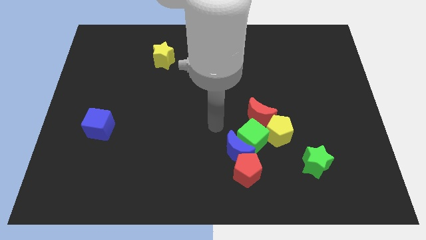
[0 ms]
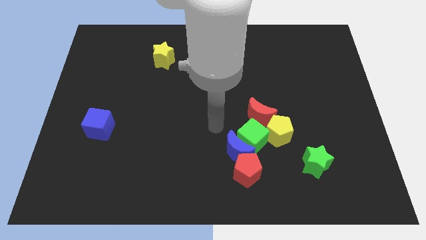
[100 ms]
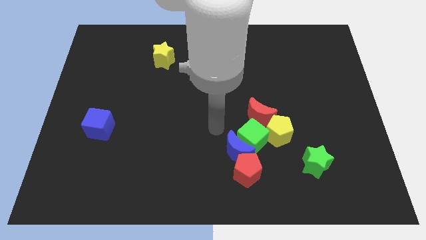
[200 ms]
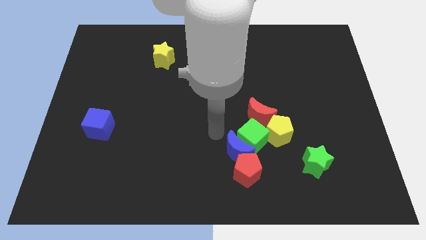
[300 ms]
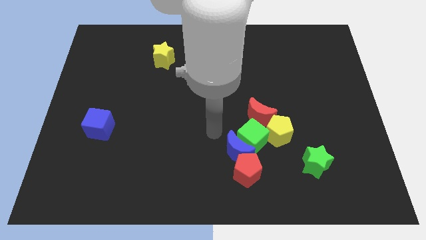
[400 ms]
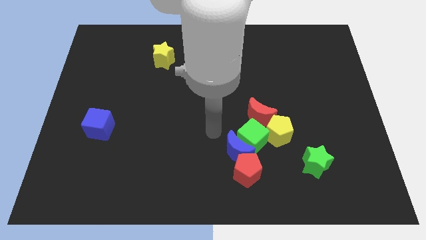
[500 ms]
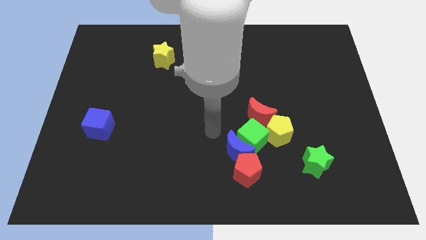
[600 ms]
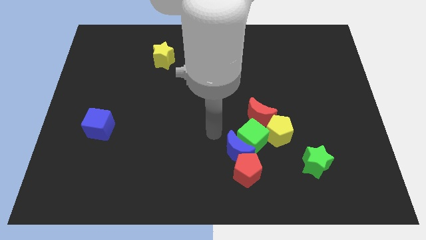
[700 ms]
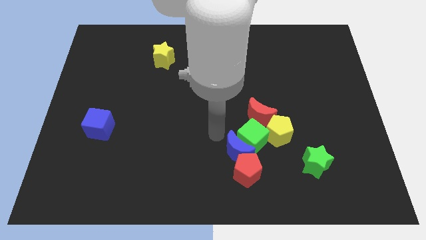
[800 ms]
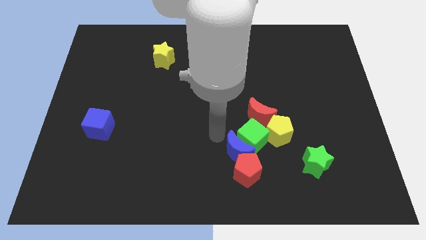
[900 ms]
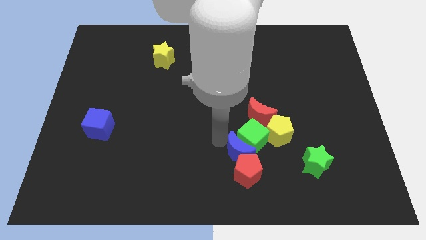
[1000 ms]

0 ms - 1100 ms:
tap your arm to the top left of blue moon

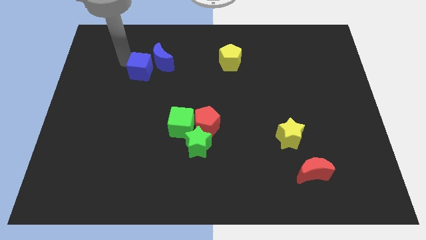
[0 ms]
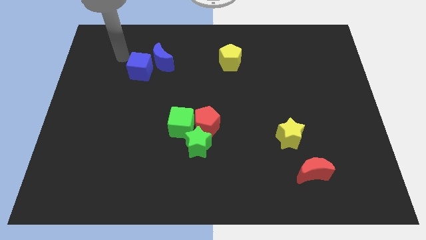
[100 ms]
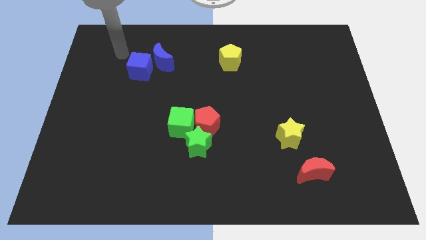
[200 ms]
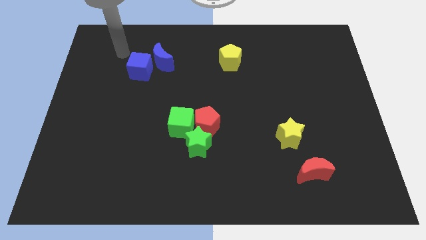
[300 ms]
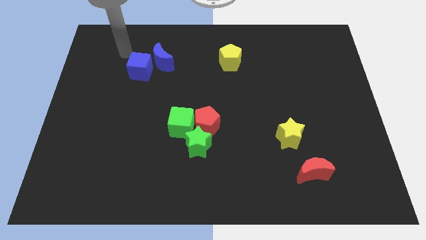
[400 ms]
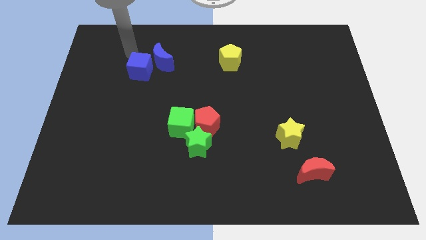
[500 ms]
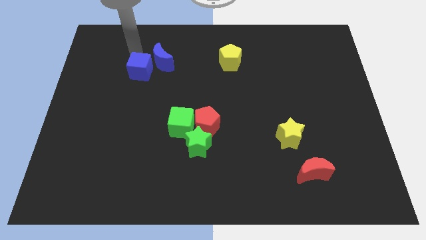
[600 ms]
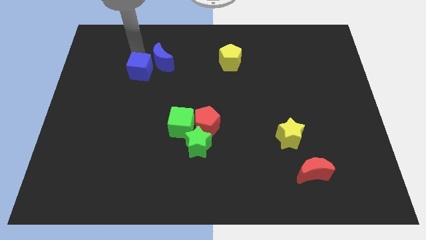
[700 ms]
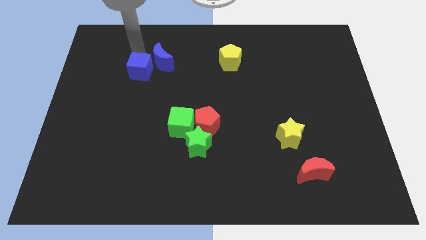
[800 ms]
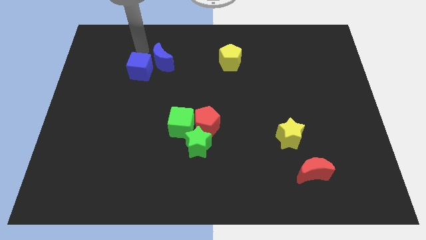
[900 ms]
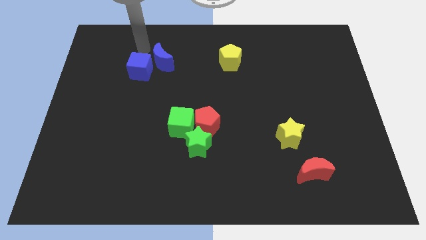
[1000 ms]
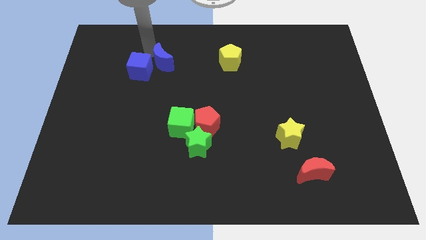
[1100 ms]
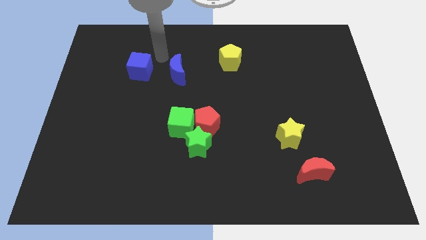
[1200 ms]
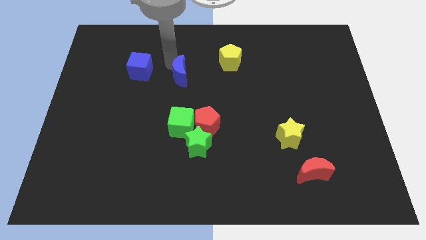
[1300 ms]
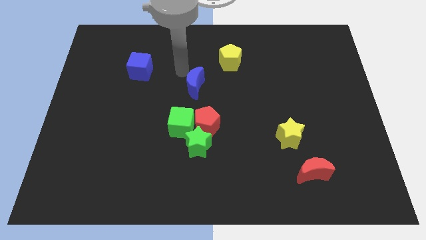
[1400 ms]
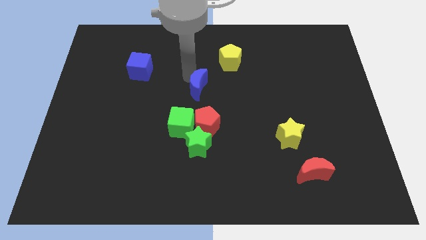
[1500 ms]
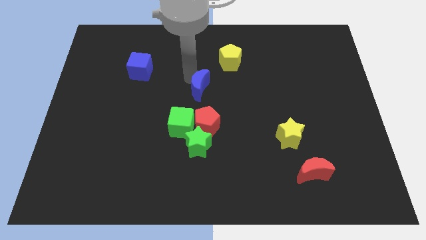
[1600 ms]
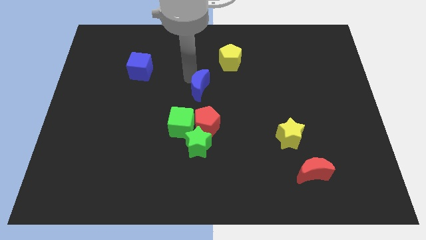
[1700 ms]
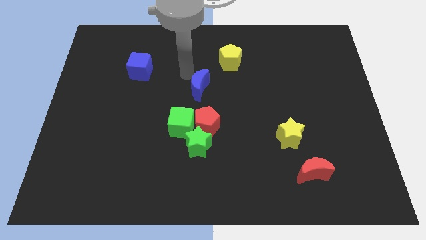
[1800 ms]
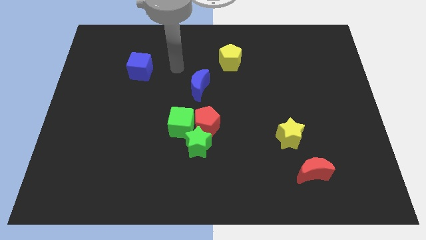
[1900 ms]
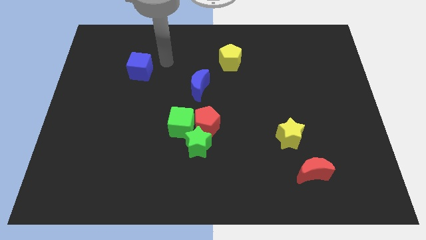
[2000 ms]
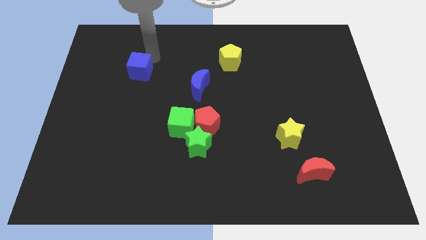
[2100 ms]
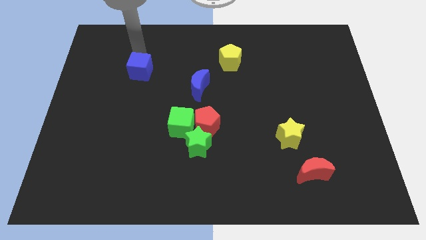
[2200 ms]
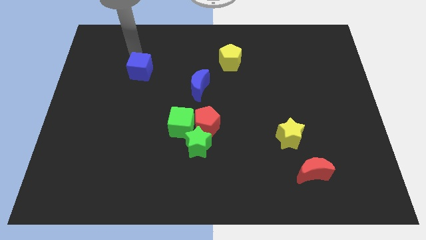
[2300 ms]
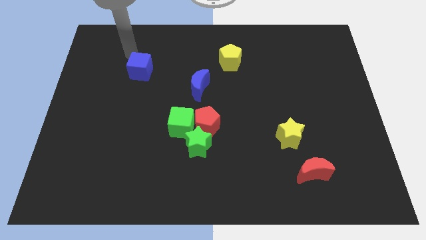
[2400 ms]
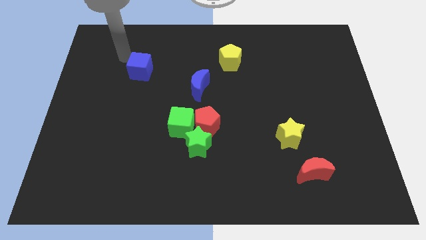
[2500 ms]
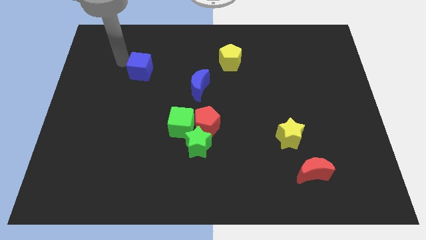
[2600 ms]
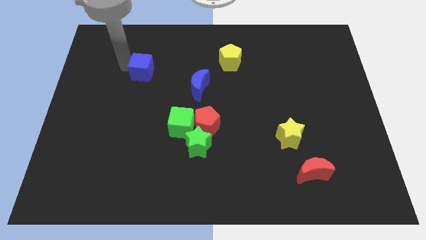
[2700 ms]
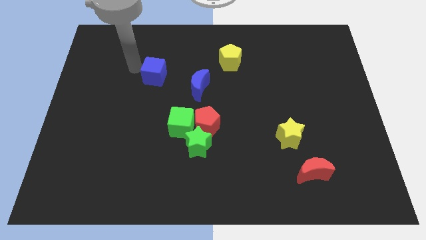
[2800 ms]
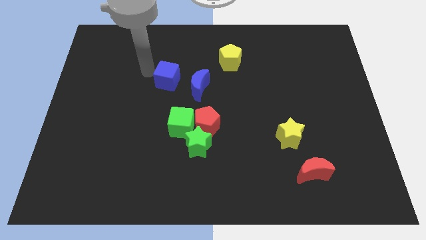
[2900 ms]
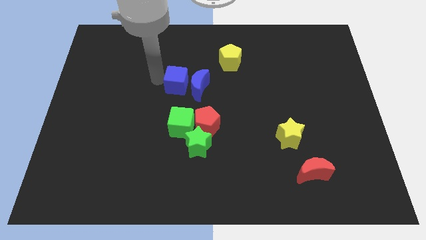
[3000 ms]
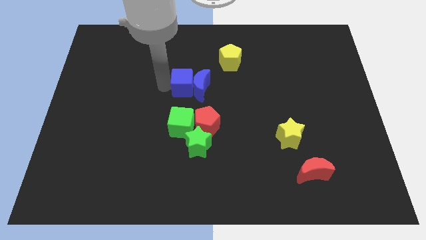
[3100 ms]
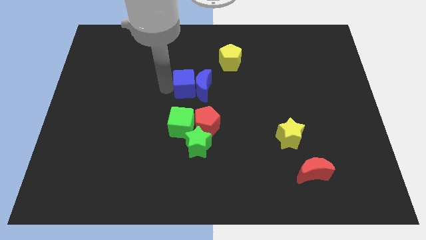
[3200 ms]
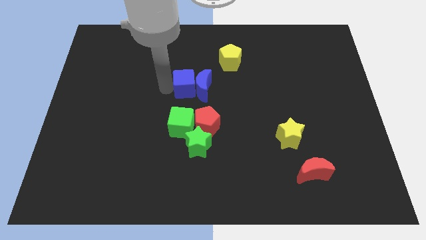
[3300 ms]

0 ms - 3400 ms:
push the blue crescent with the blue cube towards the center of the board

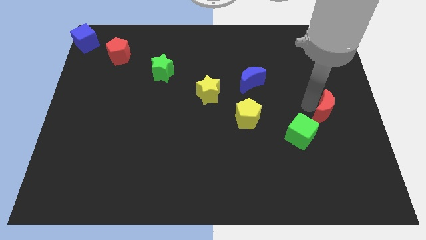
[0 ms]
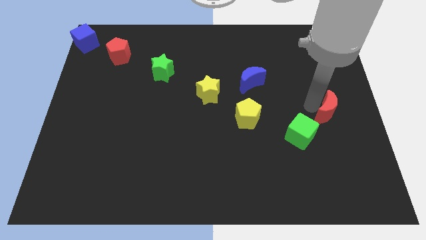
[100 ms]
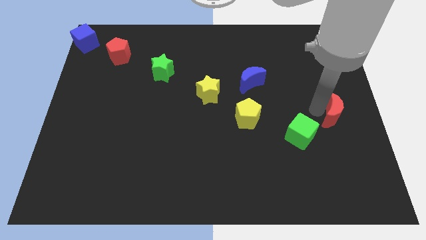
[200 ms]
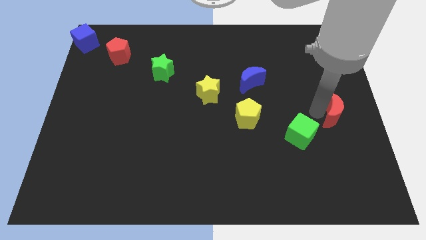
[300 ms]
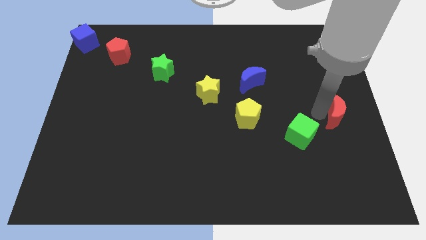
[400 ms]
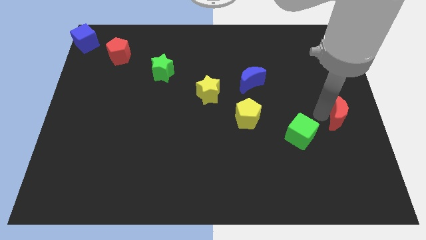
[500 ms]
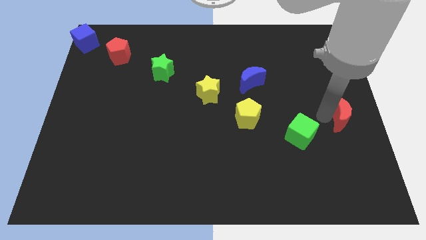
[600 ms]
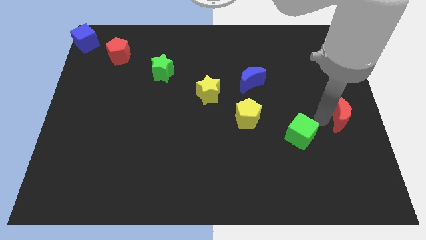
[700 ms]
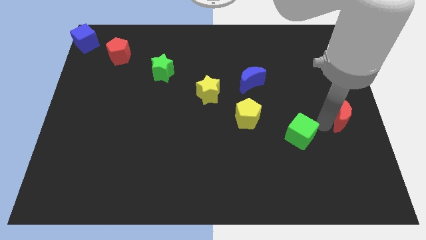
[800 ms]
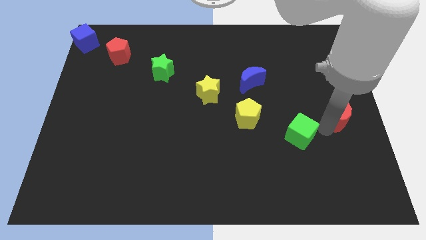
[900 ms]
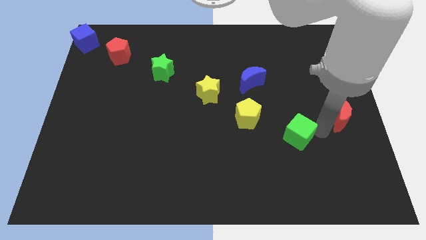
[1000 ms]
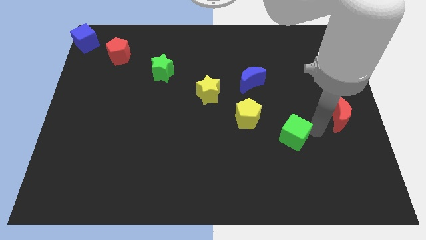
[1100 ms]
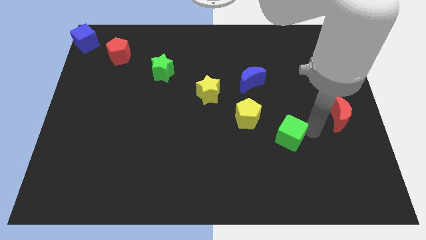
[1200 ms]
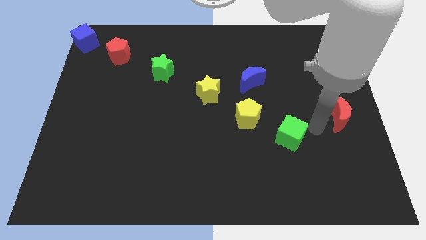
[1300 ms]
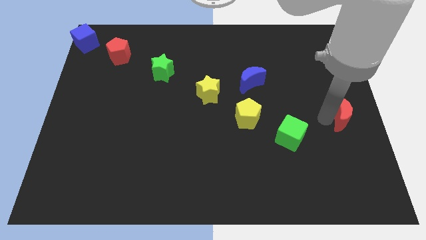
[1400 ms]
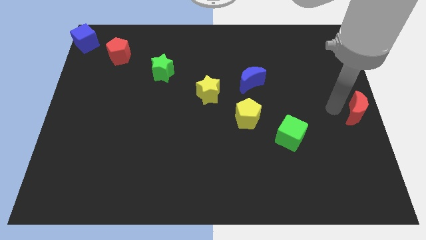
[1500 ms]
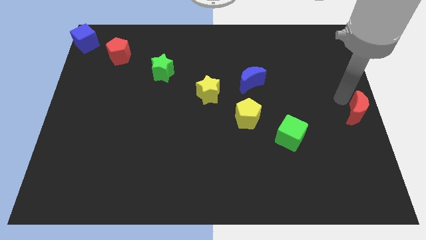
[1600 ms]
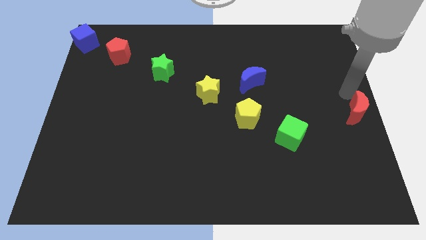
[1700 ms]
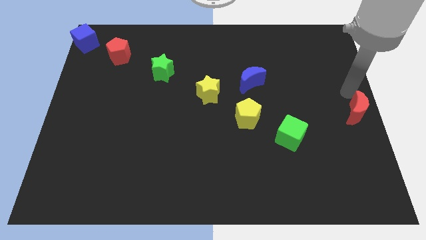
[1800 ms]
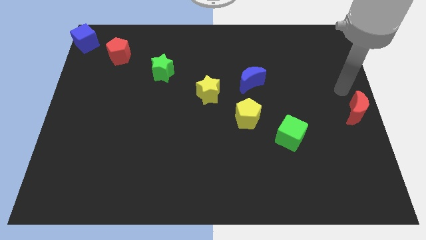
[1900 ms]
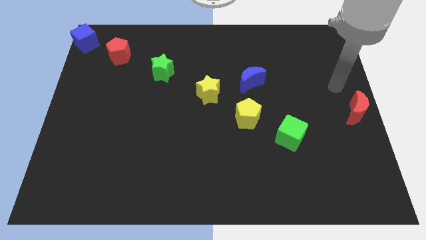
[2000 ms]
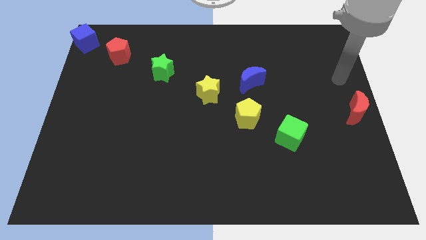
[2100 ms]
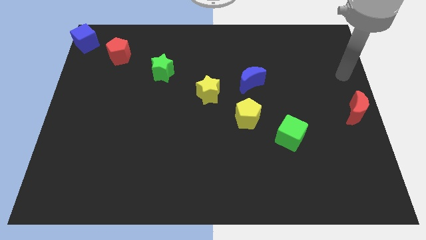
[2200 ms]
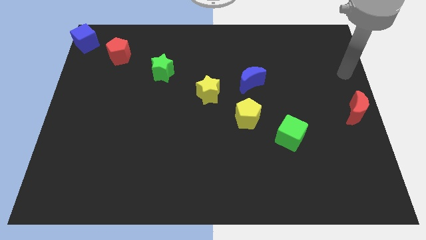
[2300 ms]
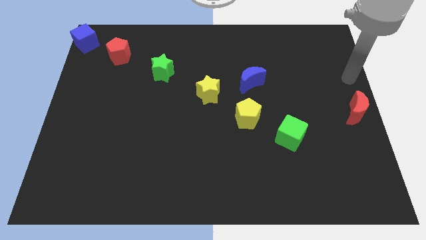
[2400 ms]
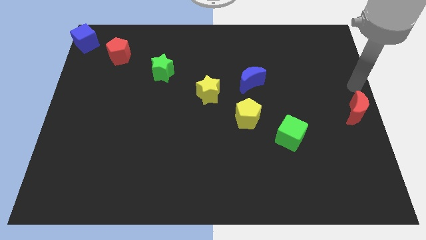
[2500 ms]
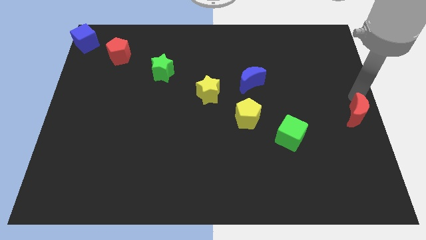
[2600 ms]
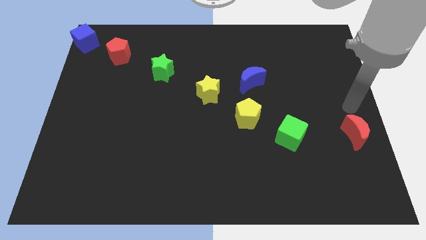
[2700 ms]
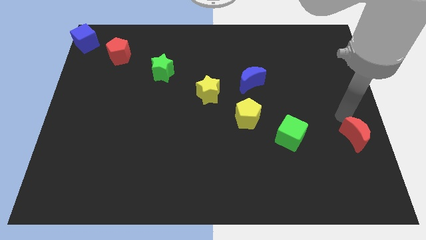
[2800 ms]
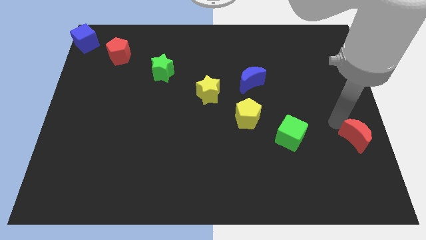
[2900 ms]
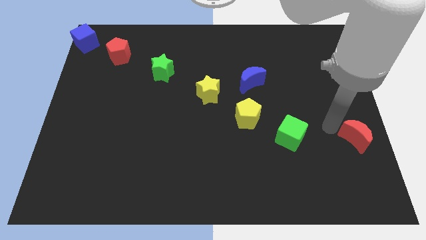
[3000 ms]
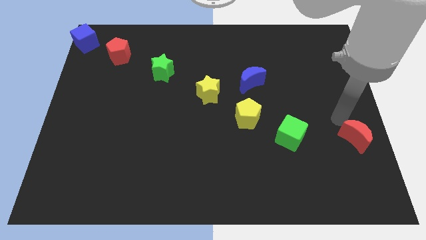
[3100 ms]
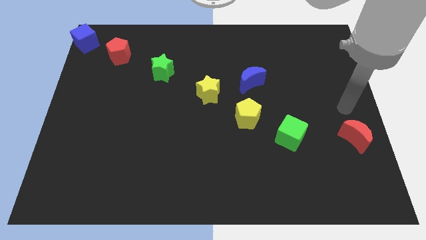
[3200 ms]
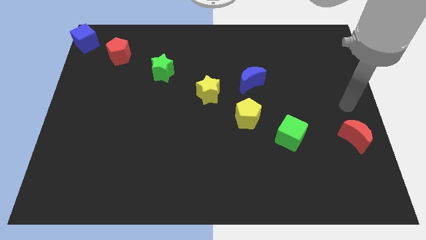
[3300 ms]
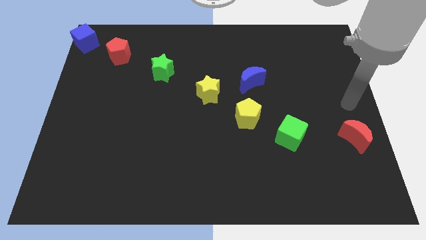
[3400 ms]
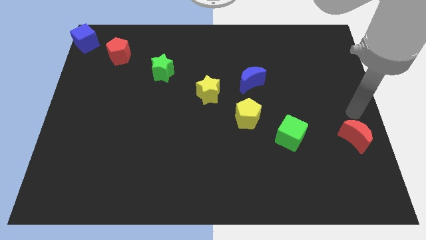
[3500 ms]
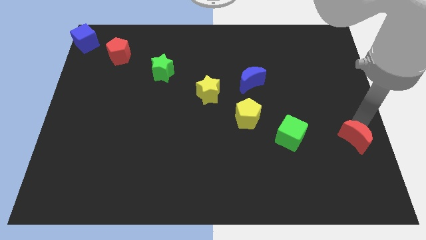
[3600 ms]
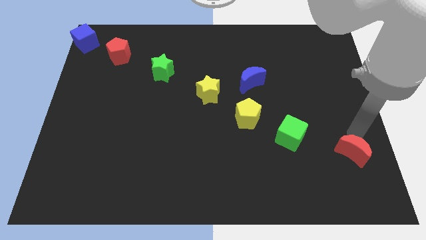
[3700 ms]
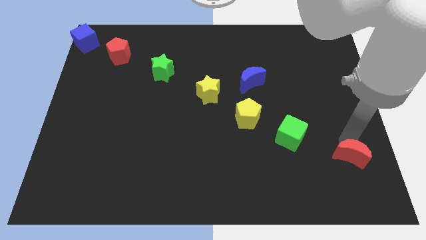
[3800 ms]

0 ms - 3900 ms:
place the red crescent to the right of the green cube to form a line

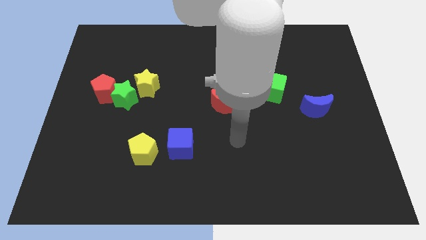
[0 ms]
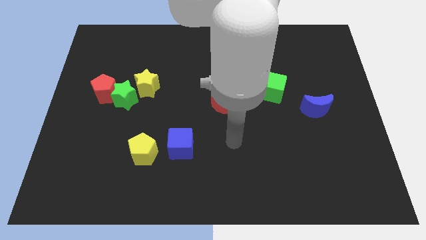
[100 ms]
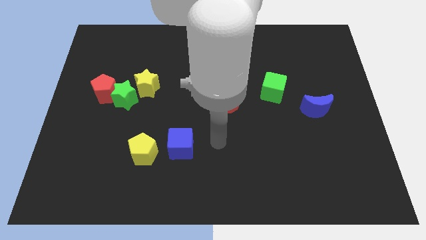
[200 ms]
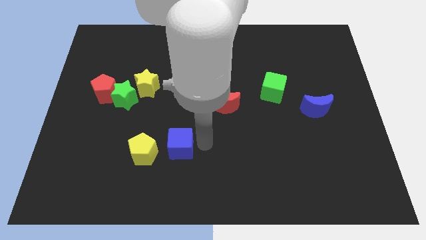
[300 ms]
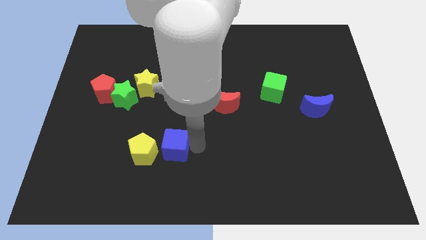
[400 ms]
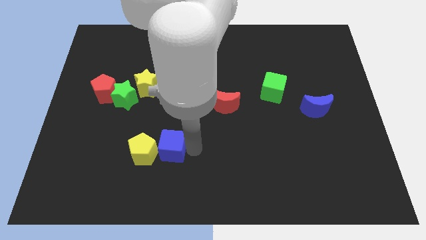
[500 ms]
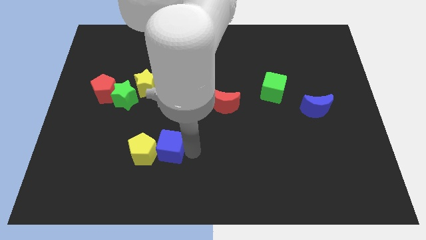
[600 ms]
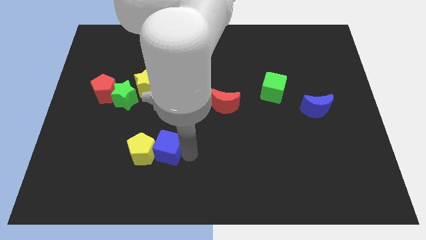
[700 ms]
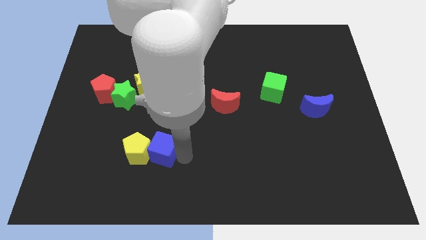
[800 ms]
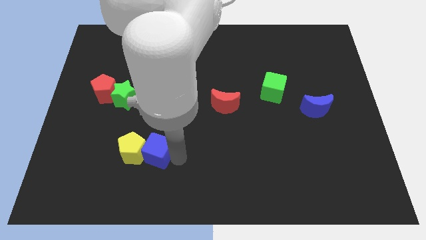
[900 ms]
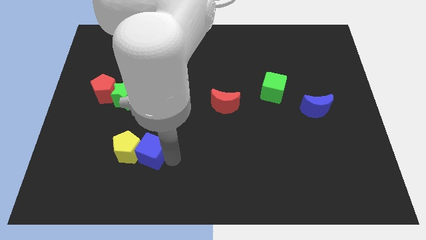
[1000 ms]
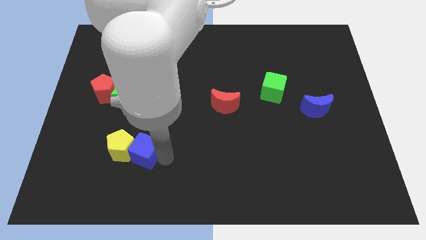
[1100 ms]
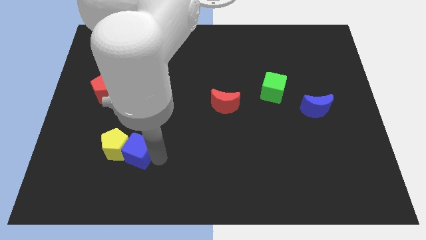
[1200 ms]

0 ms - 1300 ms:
push the blue cube into the yellow pentagon
